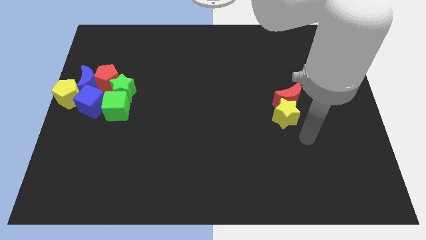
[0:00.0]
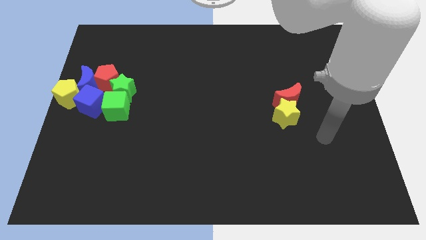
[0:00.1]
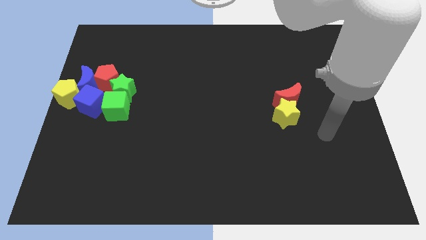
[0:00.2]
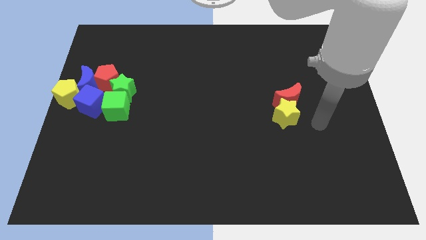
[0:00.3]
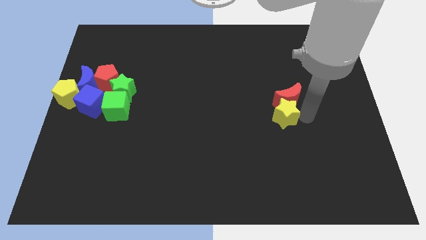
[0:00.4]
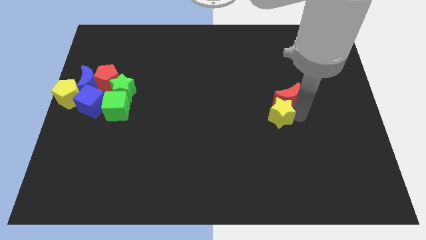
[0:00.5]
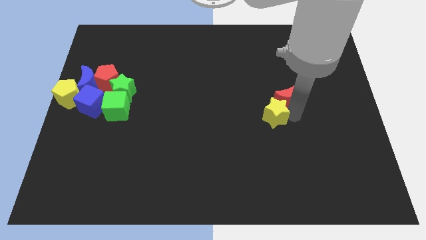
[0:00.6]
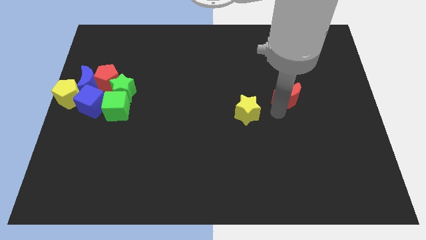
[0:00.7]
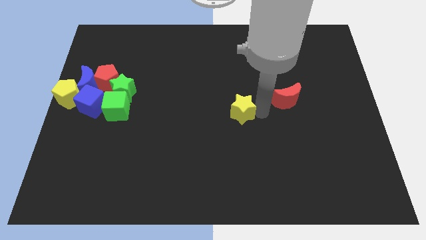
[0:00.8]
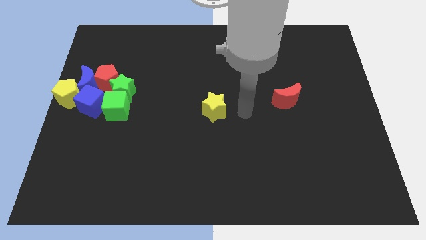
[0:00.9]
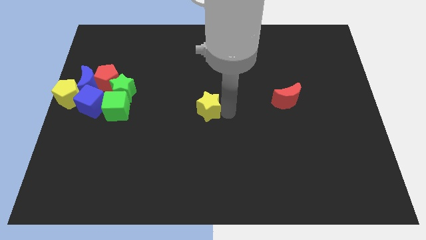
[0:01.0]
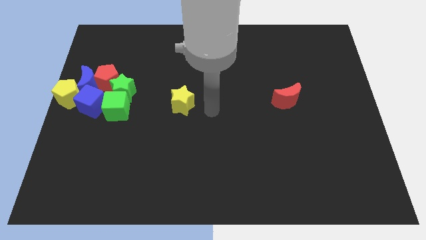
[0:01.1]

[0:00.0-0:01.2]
place the yellow star at the center

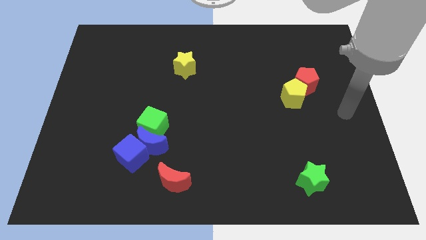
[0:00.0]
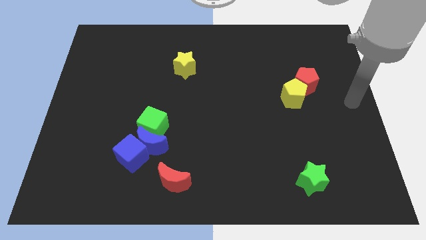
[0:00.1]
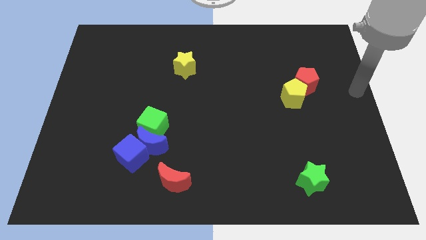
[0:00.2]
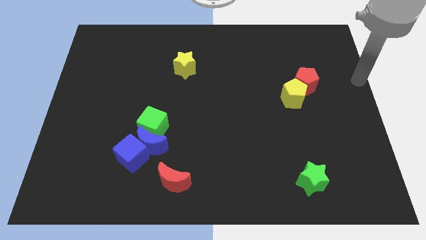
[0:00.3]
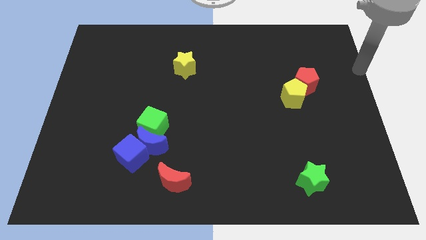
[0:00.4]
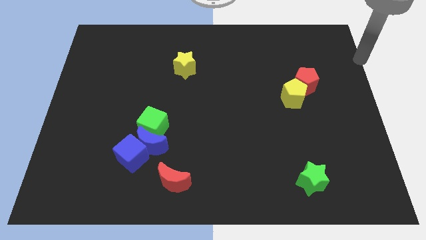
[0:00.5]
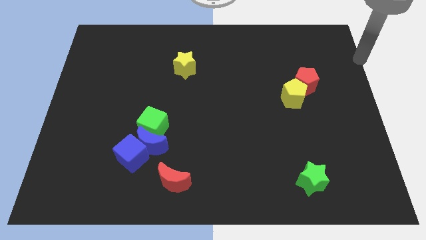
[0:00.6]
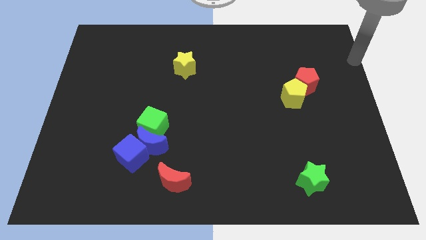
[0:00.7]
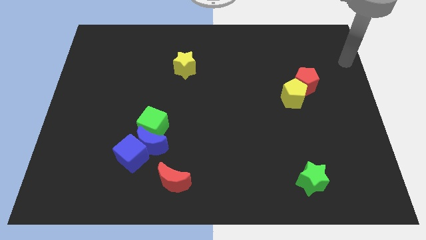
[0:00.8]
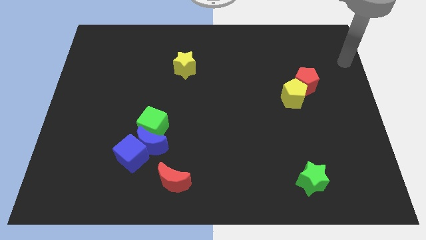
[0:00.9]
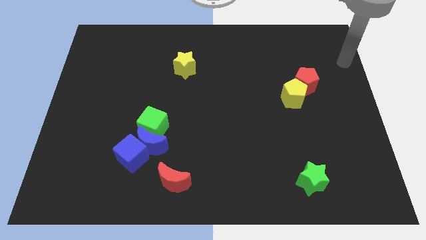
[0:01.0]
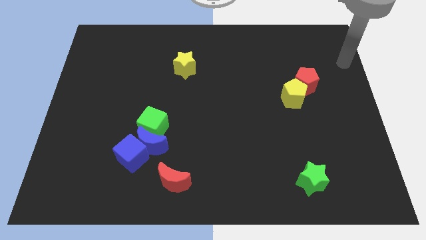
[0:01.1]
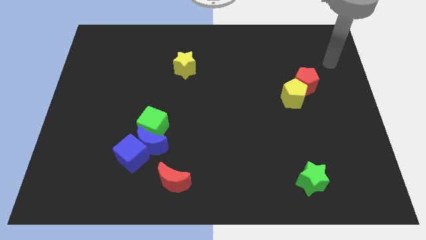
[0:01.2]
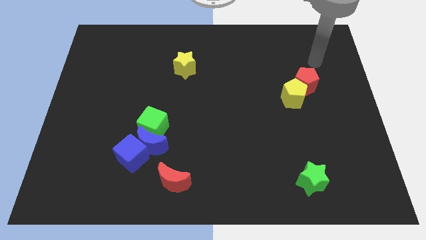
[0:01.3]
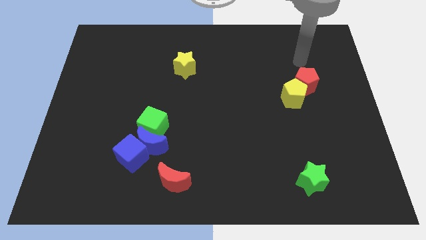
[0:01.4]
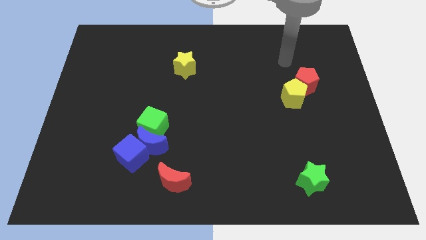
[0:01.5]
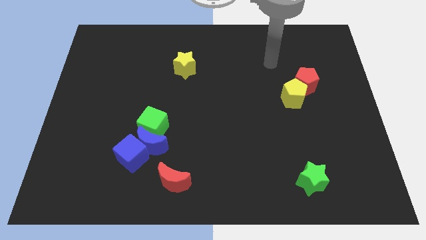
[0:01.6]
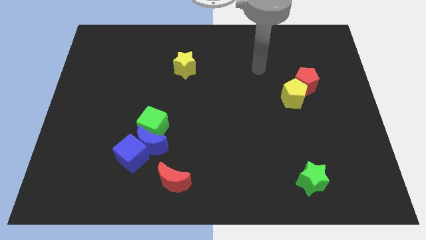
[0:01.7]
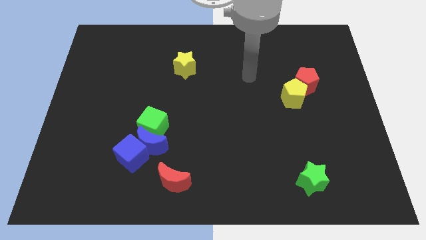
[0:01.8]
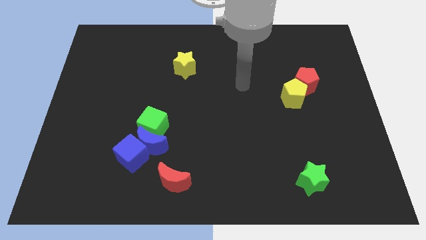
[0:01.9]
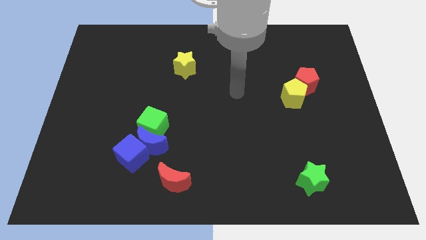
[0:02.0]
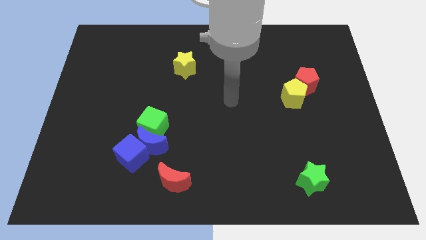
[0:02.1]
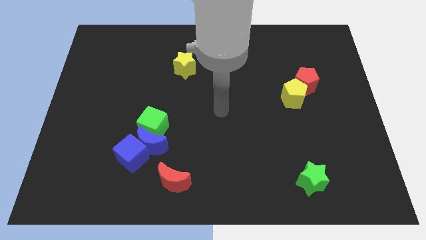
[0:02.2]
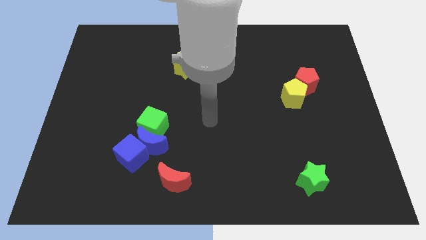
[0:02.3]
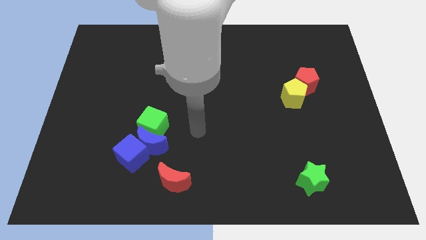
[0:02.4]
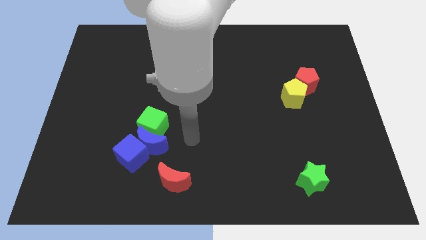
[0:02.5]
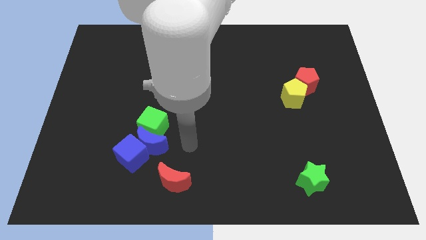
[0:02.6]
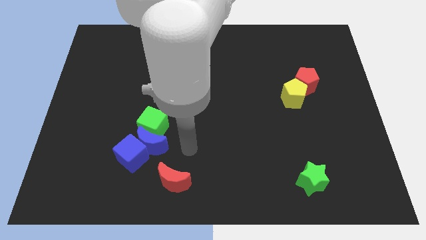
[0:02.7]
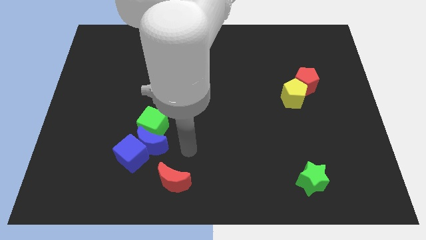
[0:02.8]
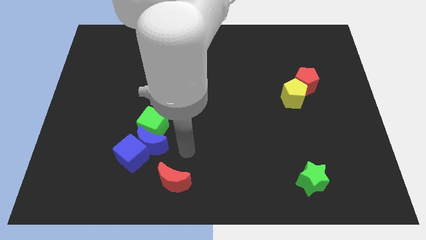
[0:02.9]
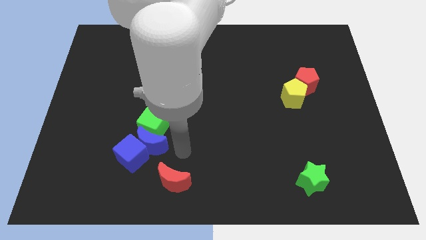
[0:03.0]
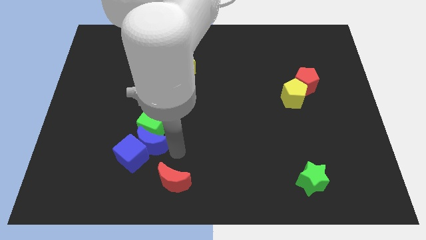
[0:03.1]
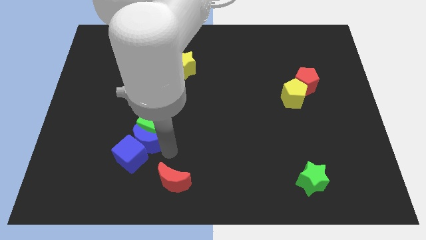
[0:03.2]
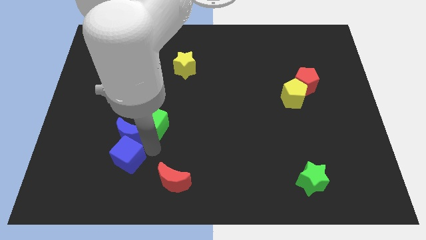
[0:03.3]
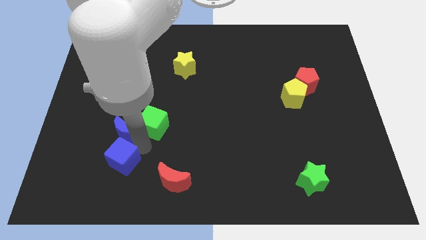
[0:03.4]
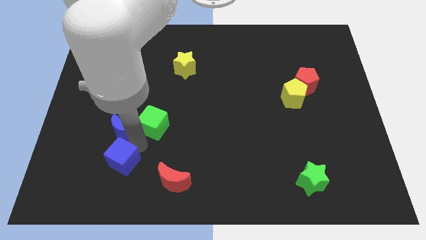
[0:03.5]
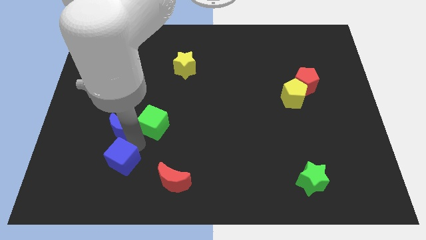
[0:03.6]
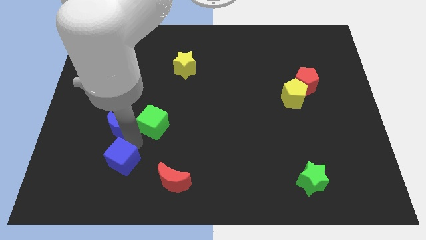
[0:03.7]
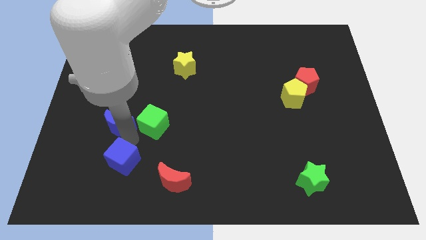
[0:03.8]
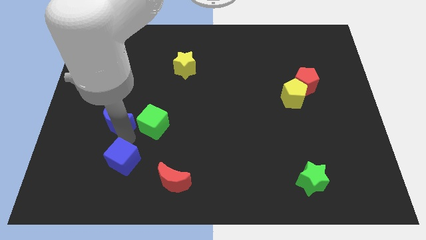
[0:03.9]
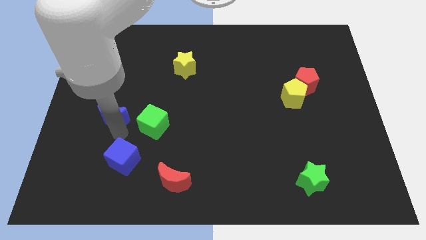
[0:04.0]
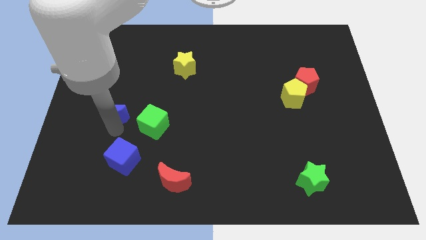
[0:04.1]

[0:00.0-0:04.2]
separate the blue moon from the blue cube and green cube

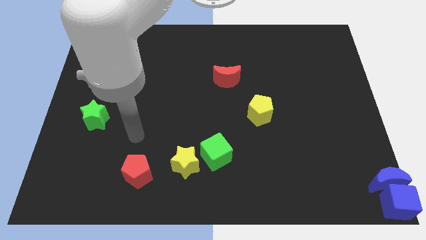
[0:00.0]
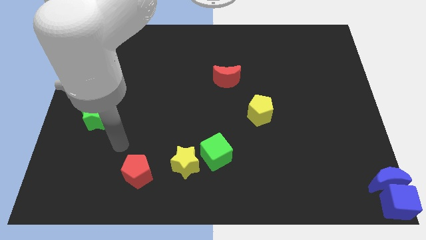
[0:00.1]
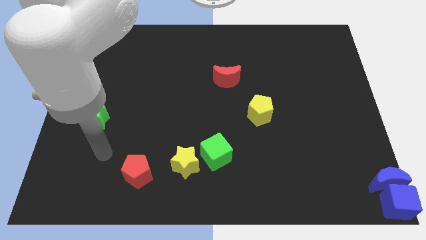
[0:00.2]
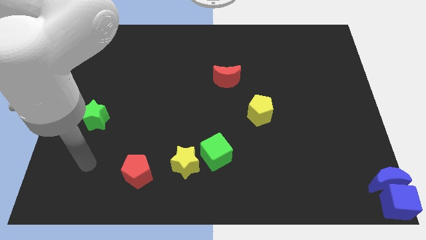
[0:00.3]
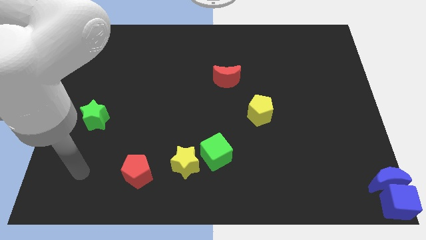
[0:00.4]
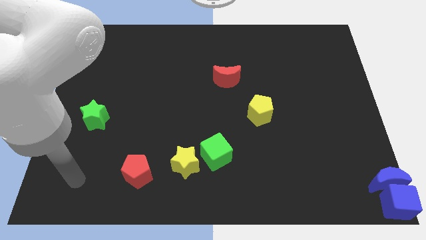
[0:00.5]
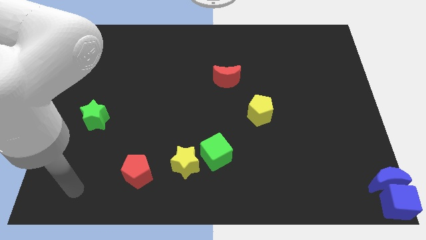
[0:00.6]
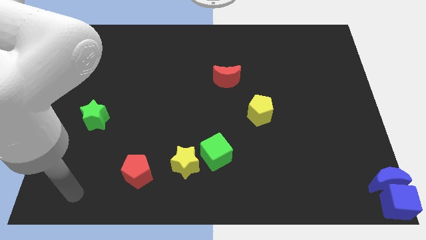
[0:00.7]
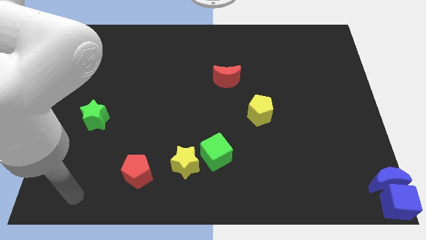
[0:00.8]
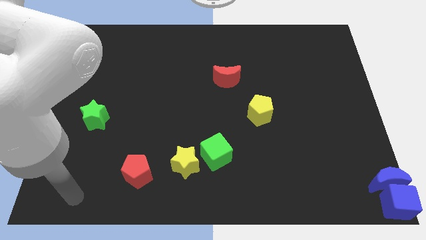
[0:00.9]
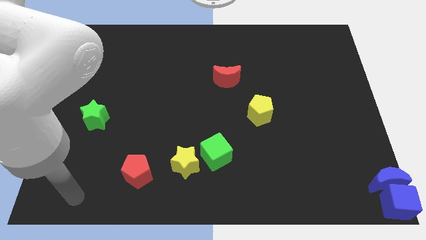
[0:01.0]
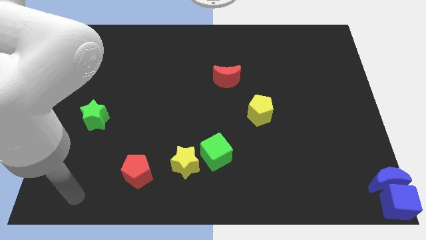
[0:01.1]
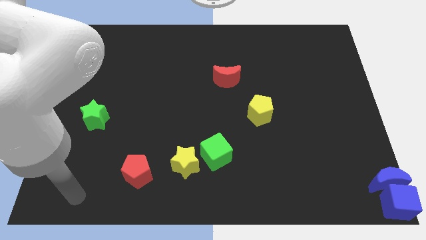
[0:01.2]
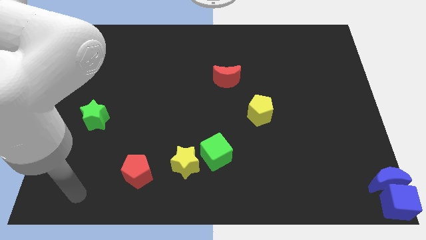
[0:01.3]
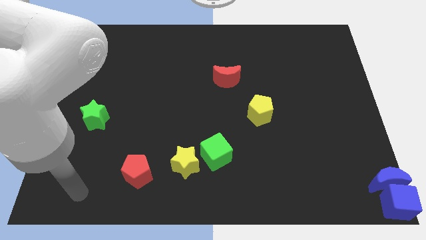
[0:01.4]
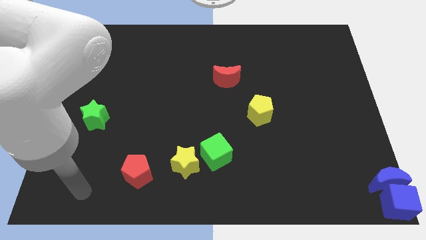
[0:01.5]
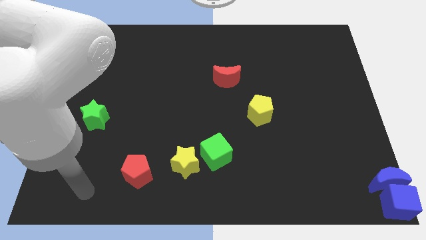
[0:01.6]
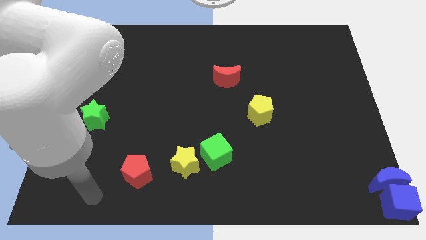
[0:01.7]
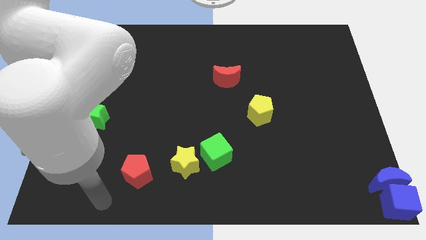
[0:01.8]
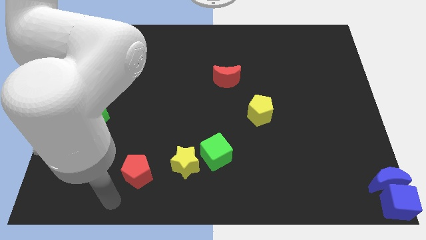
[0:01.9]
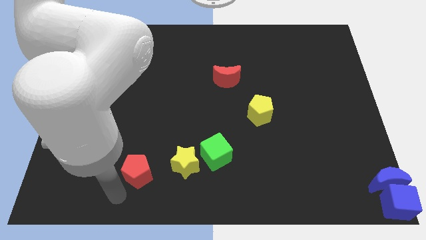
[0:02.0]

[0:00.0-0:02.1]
point your arm below the red pentagon

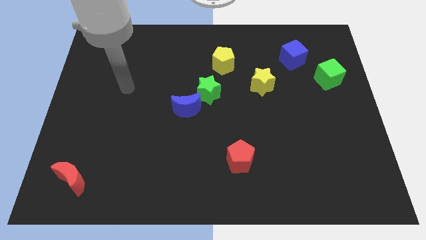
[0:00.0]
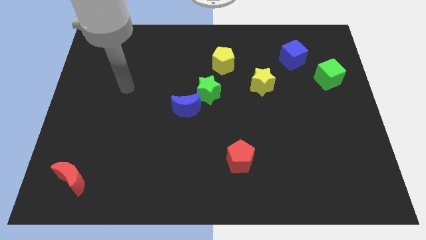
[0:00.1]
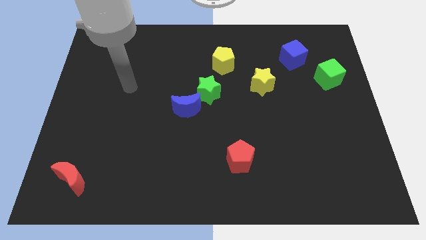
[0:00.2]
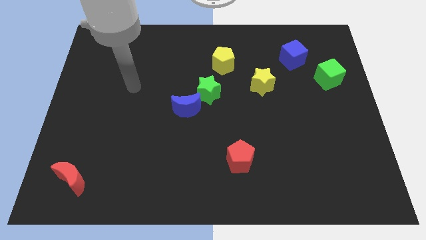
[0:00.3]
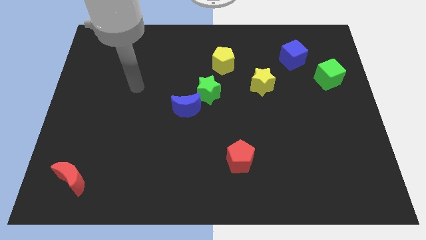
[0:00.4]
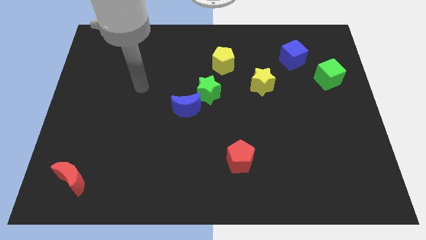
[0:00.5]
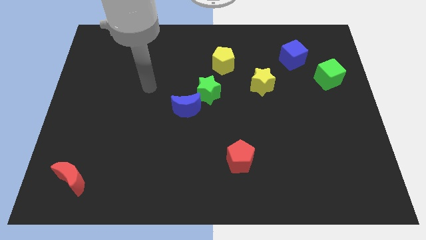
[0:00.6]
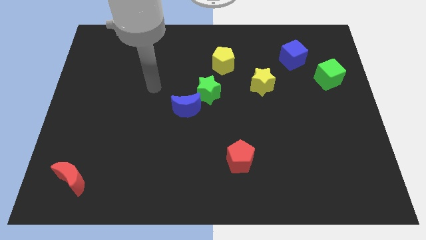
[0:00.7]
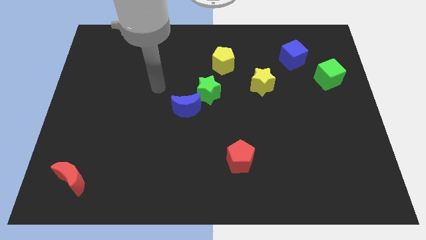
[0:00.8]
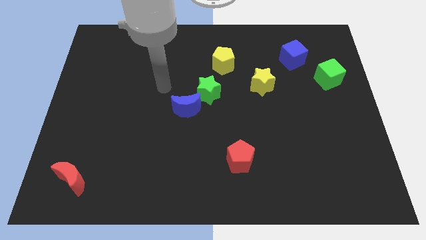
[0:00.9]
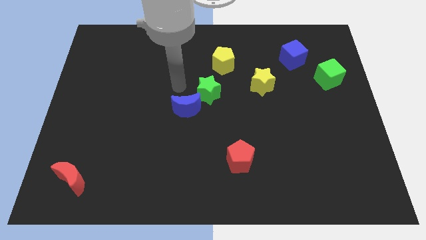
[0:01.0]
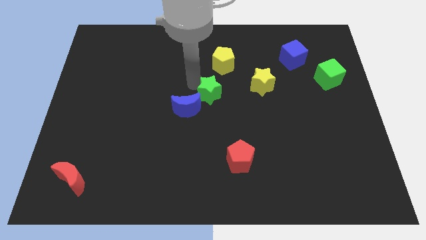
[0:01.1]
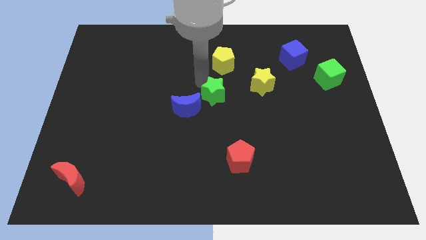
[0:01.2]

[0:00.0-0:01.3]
tap the top left of the green star
